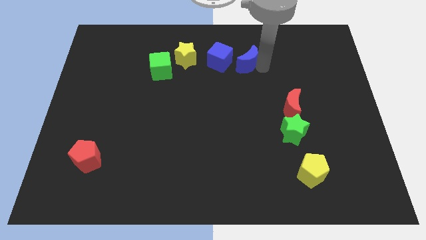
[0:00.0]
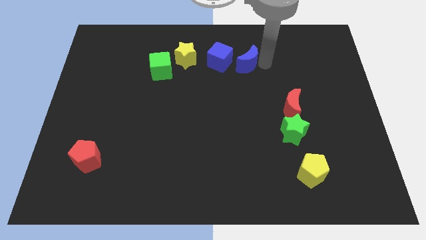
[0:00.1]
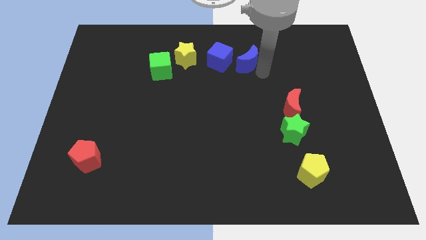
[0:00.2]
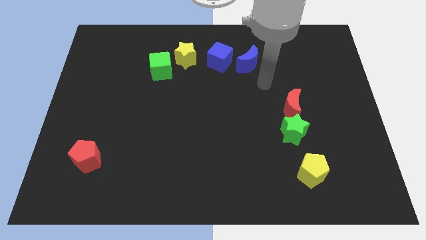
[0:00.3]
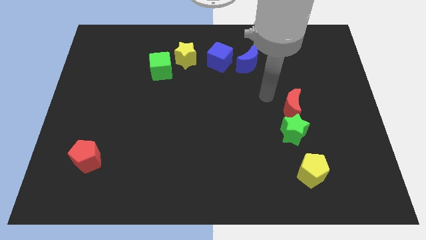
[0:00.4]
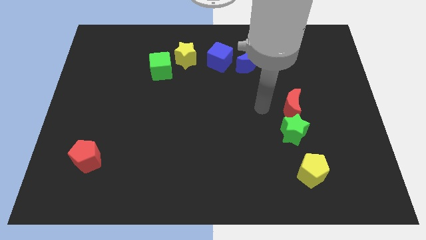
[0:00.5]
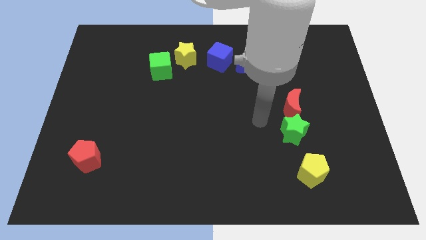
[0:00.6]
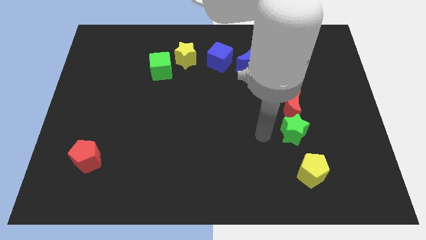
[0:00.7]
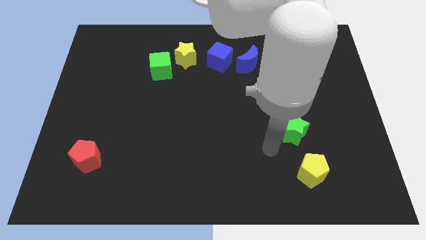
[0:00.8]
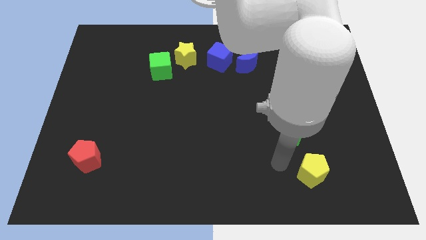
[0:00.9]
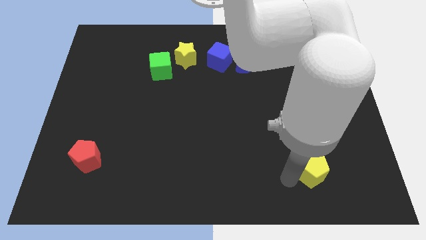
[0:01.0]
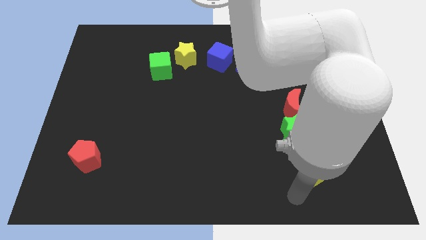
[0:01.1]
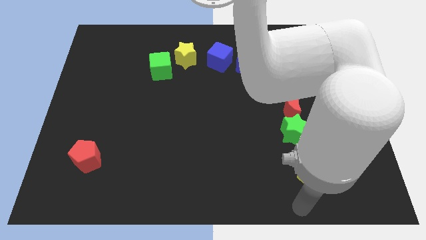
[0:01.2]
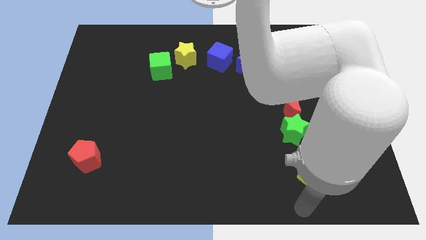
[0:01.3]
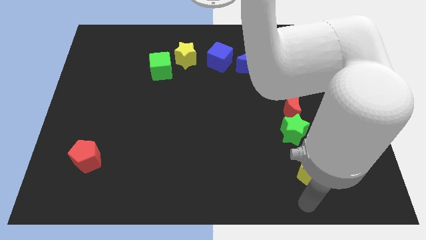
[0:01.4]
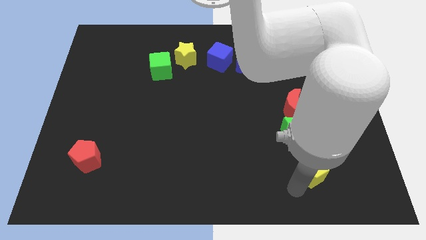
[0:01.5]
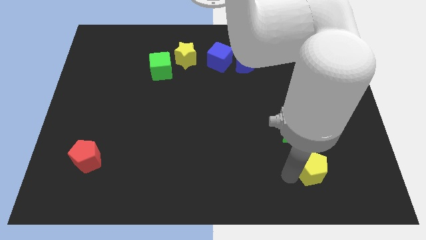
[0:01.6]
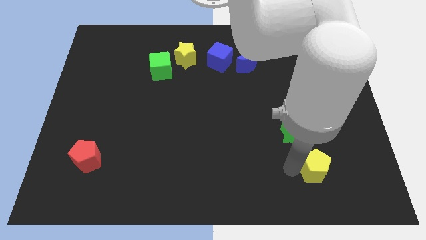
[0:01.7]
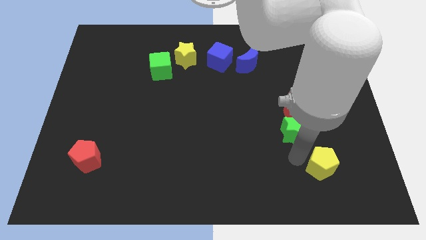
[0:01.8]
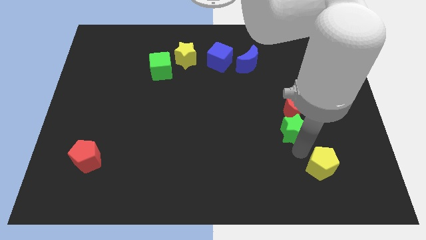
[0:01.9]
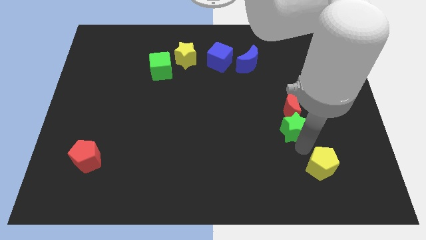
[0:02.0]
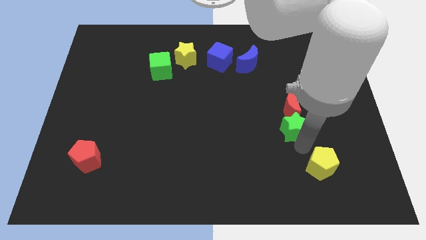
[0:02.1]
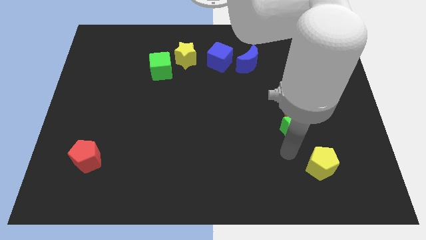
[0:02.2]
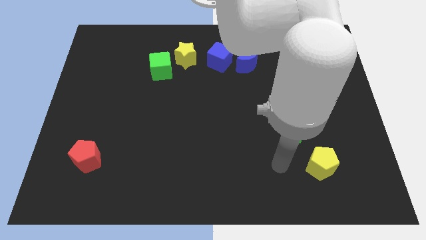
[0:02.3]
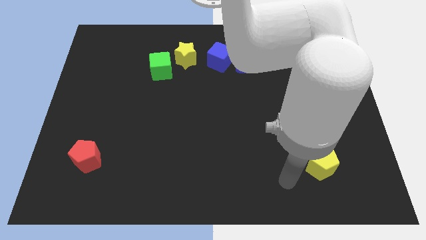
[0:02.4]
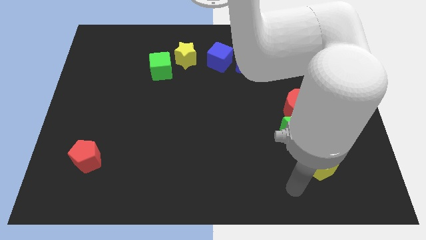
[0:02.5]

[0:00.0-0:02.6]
move the yellow pentagon slightly

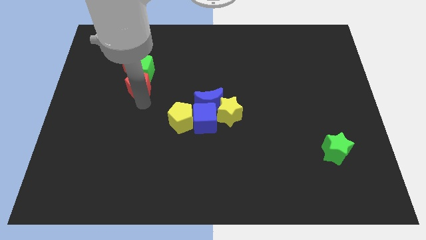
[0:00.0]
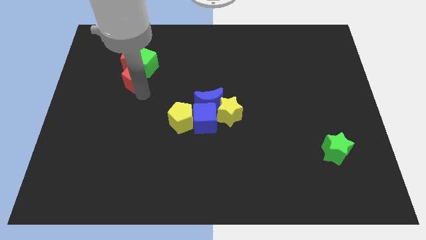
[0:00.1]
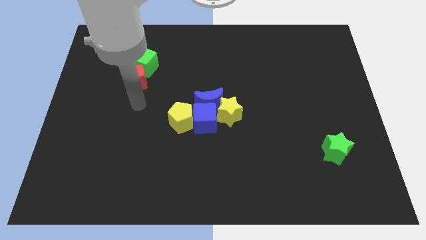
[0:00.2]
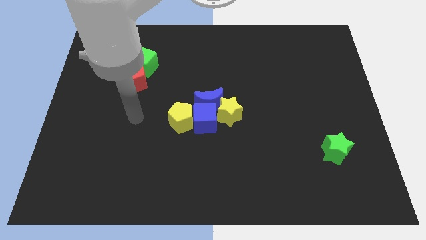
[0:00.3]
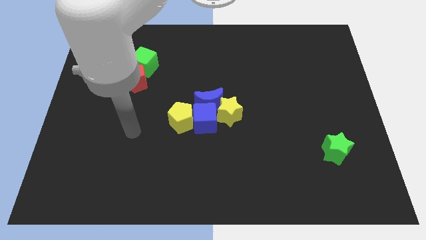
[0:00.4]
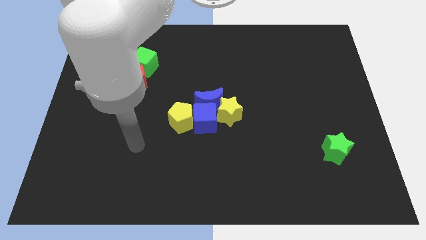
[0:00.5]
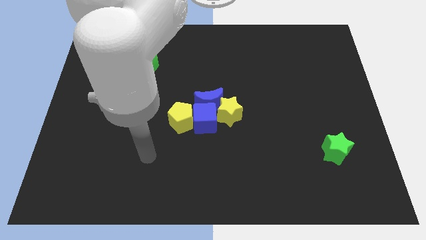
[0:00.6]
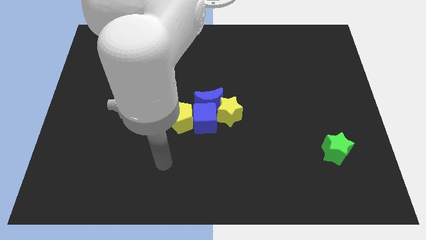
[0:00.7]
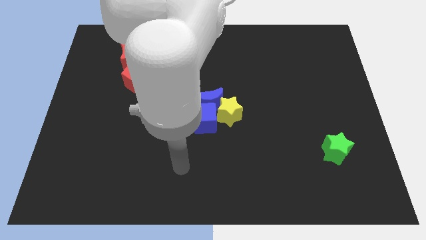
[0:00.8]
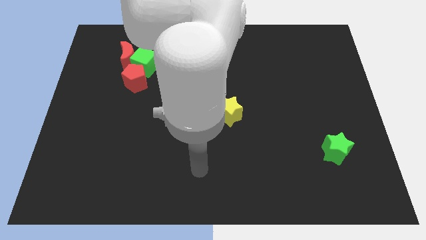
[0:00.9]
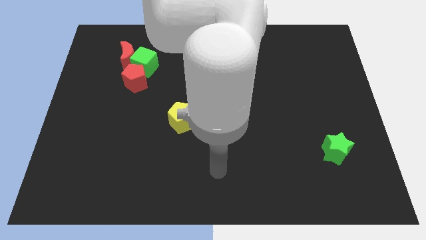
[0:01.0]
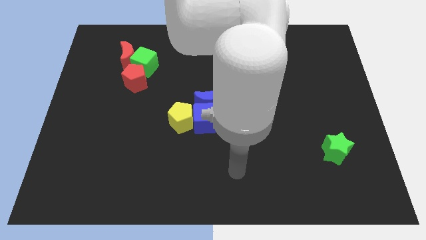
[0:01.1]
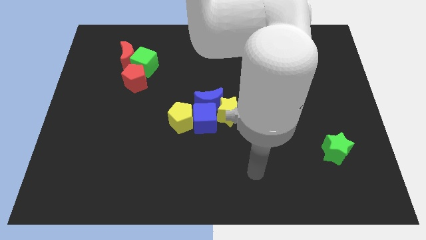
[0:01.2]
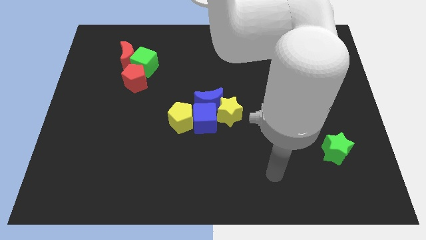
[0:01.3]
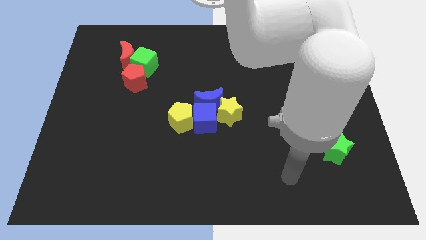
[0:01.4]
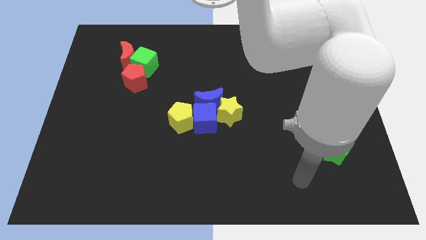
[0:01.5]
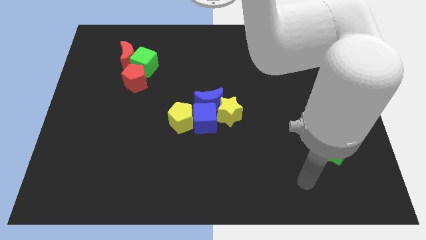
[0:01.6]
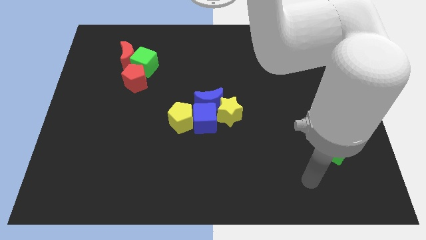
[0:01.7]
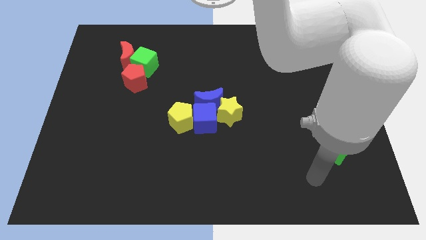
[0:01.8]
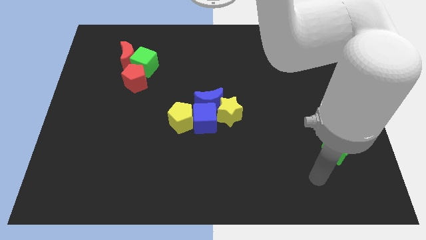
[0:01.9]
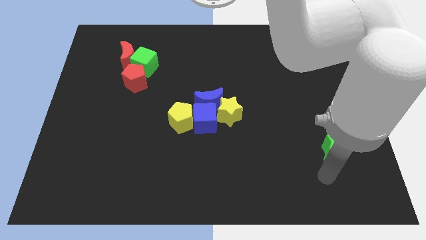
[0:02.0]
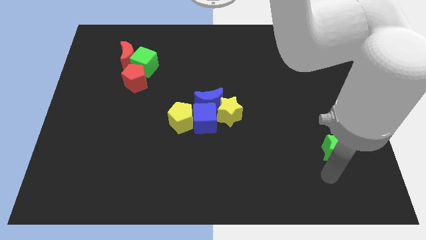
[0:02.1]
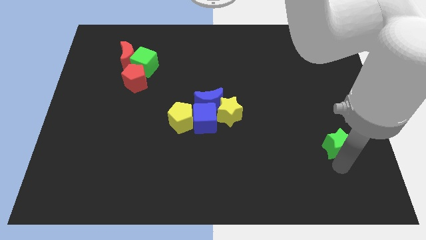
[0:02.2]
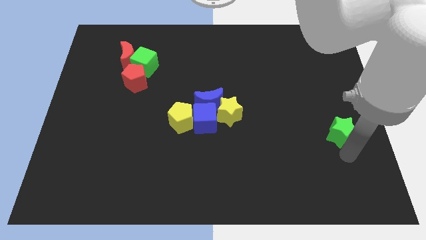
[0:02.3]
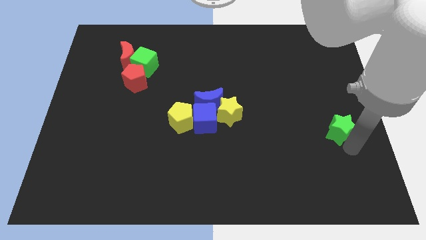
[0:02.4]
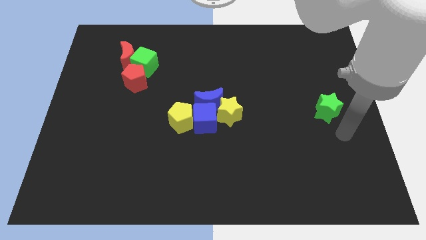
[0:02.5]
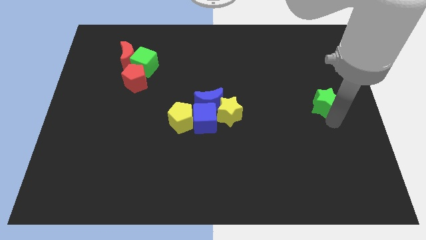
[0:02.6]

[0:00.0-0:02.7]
push green star opposite to yellow star

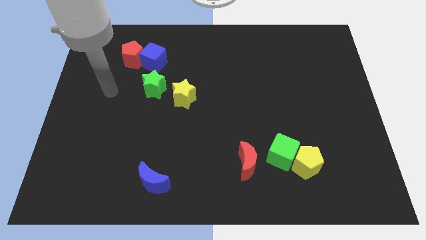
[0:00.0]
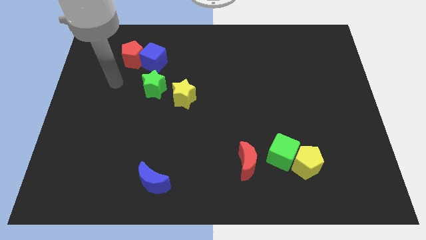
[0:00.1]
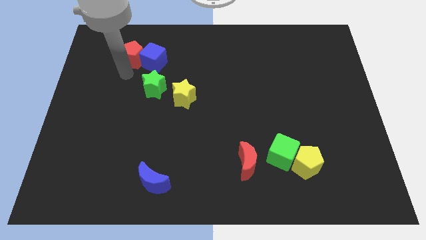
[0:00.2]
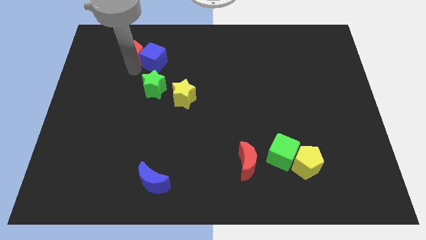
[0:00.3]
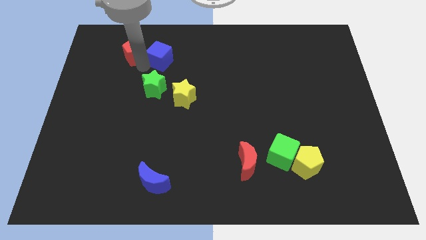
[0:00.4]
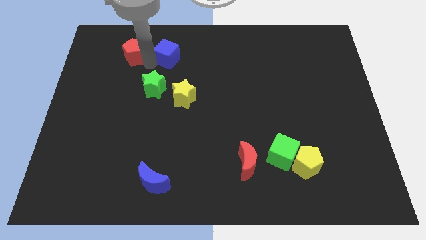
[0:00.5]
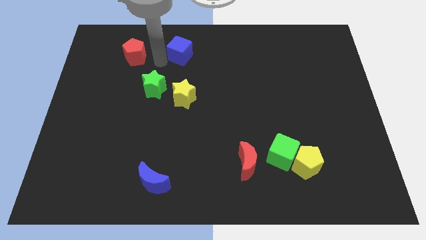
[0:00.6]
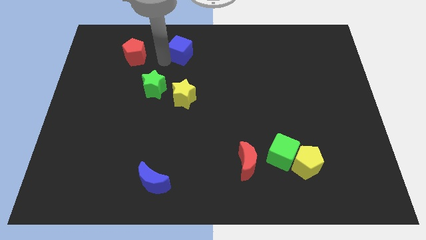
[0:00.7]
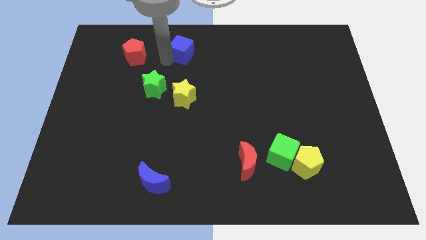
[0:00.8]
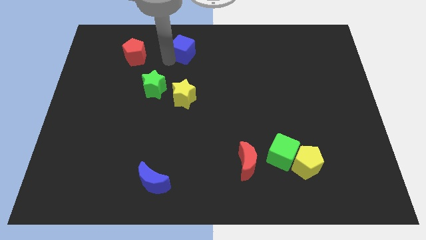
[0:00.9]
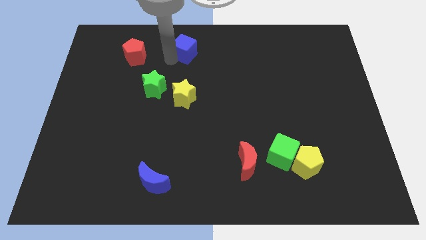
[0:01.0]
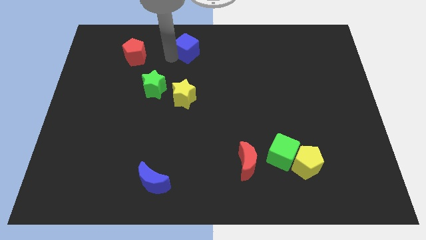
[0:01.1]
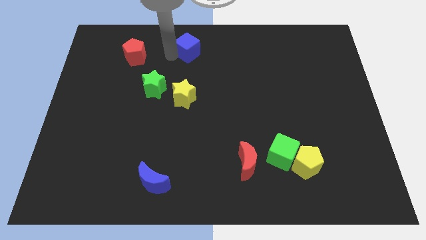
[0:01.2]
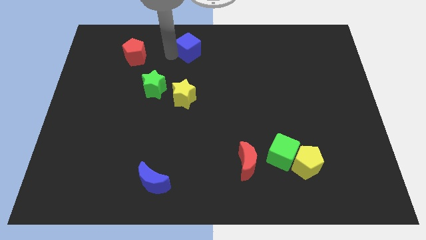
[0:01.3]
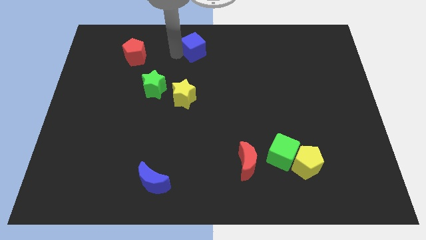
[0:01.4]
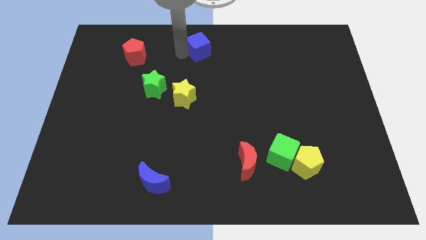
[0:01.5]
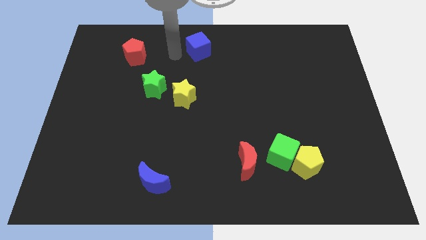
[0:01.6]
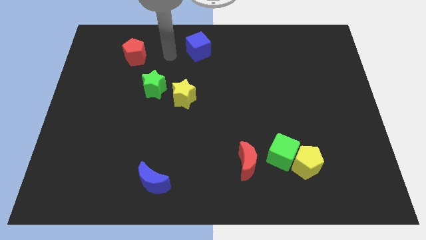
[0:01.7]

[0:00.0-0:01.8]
move the blue cube away from the red pentagon

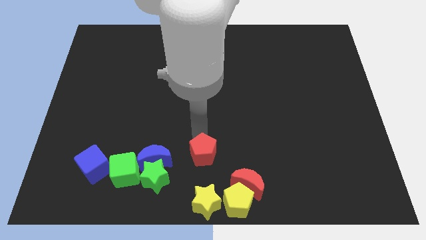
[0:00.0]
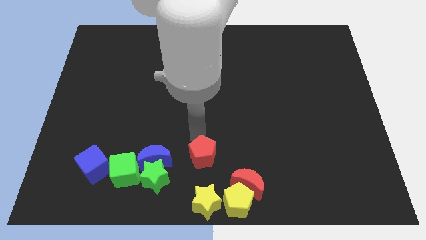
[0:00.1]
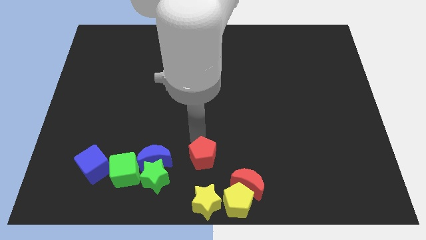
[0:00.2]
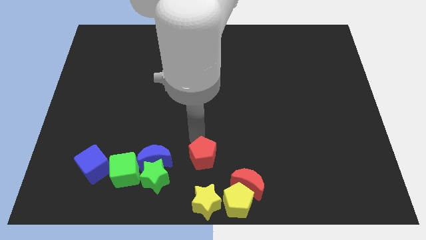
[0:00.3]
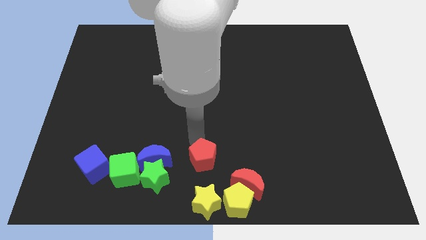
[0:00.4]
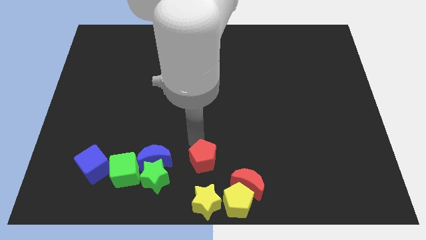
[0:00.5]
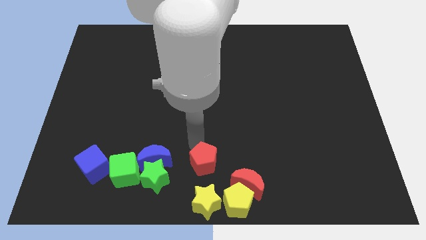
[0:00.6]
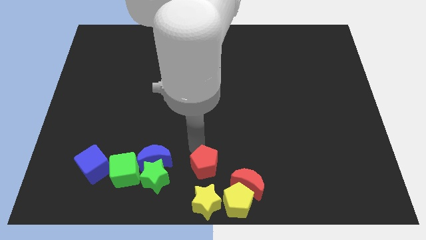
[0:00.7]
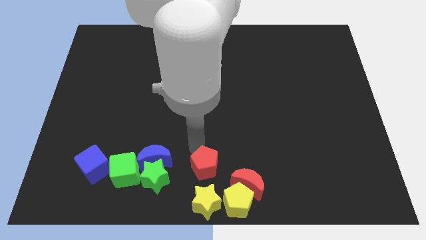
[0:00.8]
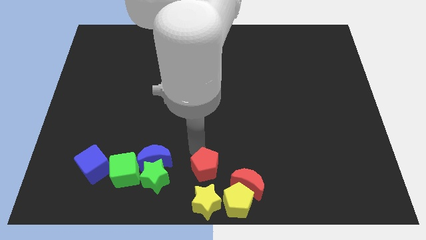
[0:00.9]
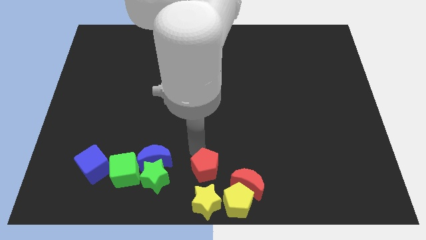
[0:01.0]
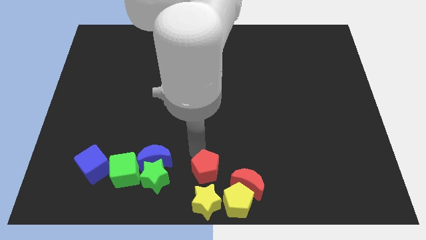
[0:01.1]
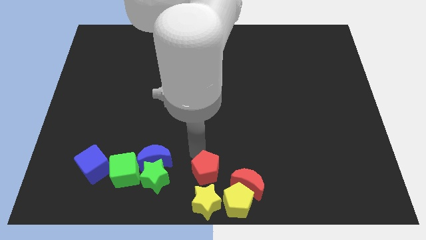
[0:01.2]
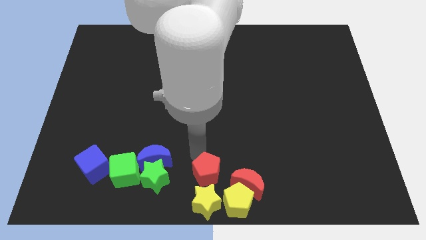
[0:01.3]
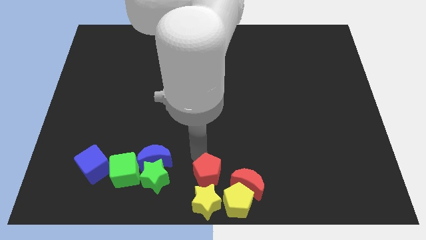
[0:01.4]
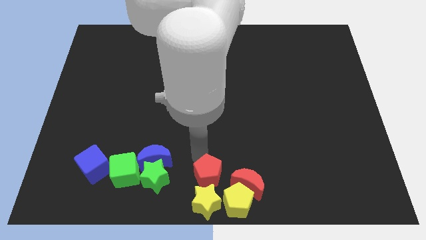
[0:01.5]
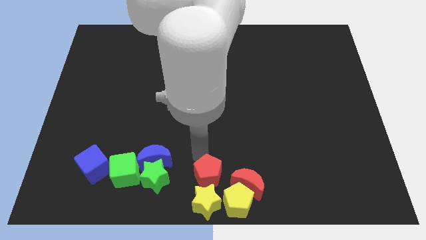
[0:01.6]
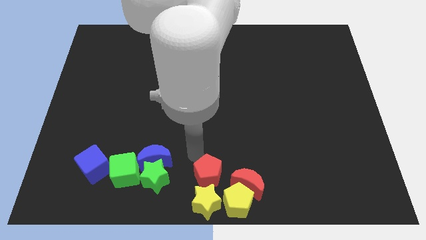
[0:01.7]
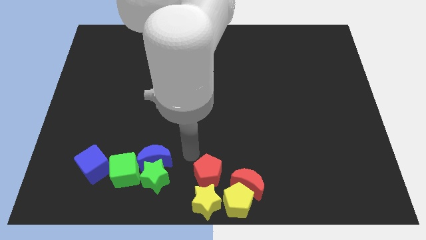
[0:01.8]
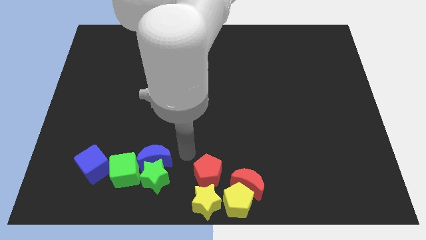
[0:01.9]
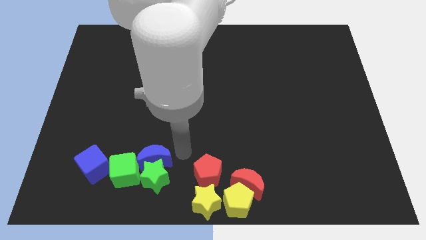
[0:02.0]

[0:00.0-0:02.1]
push the red pentagon close to the top of the yellow star
